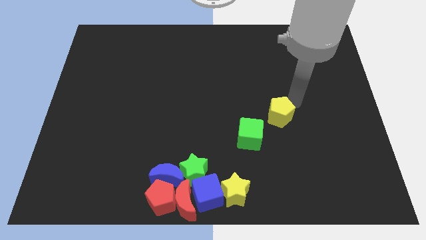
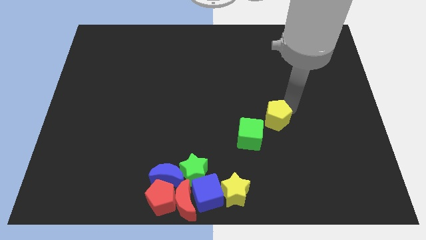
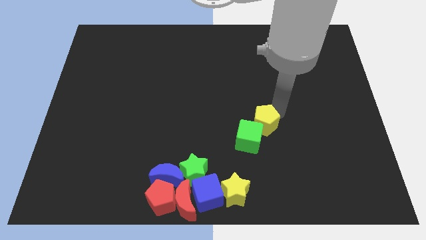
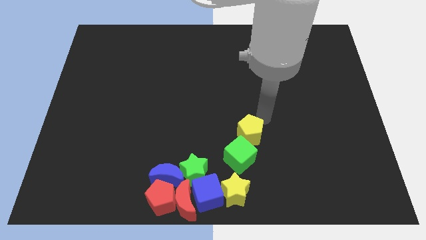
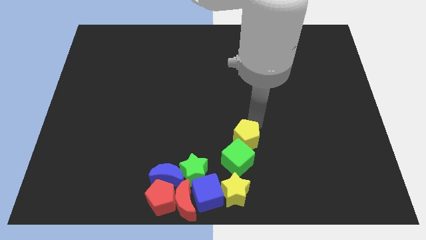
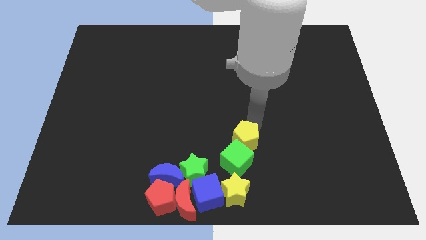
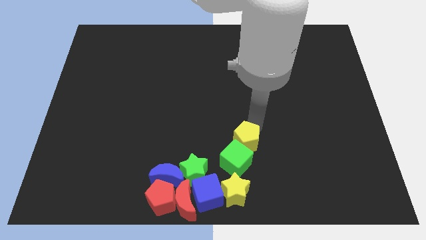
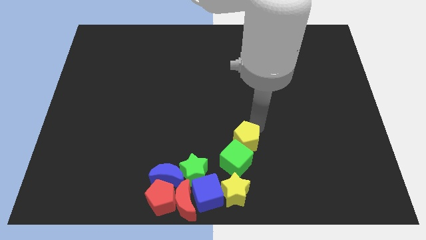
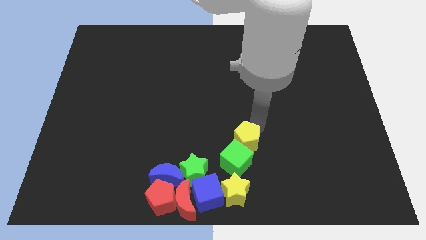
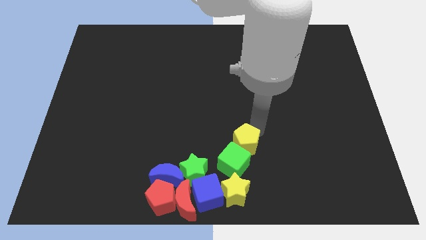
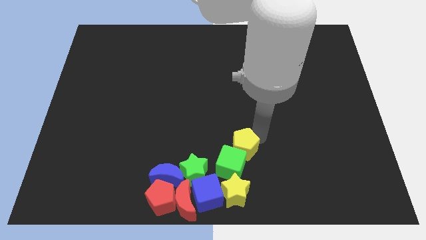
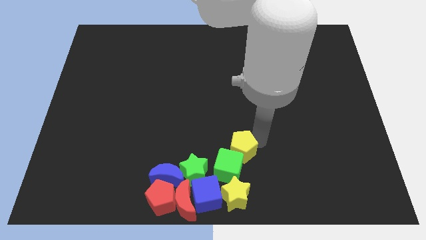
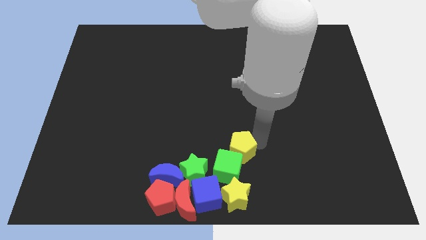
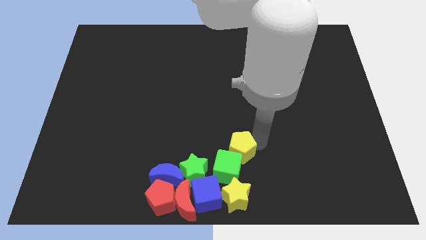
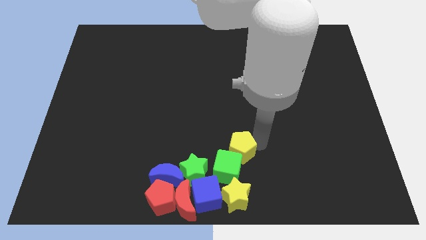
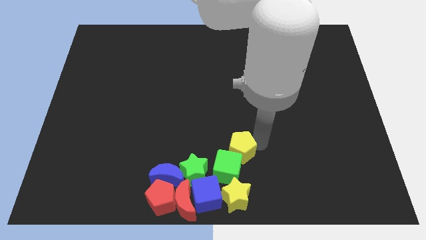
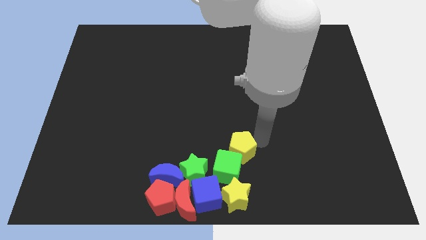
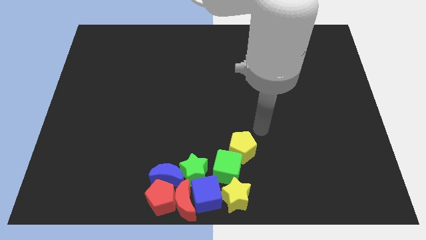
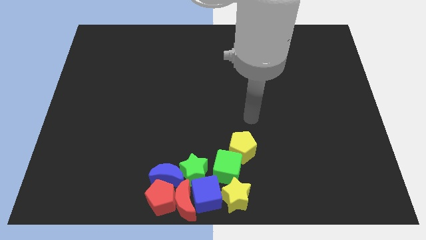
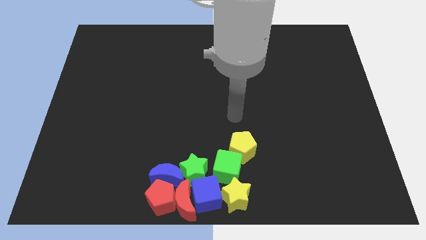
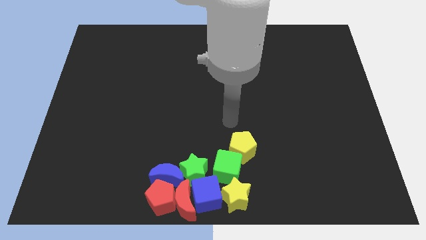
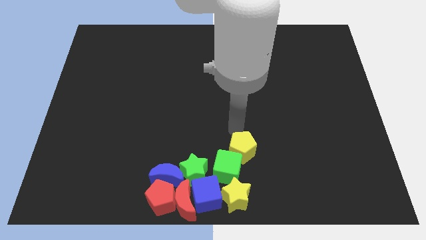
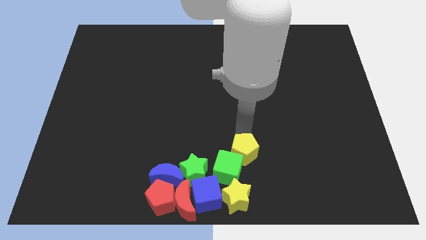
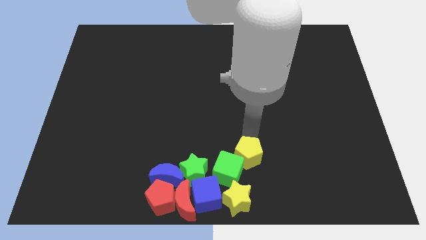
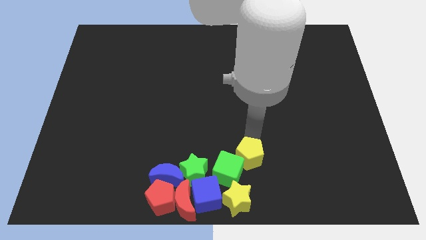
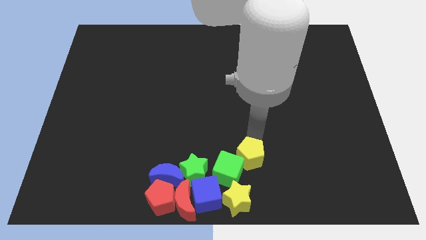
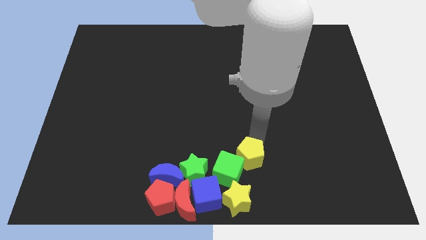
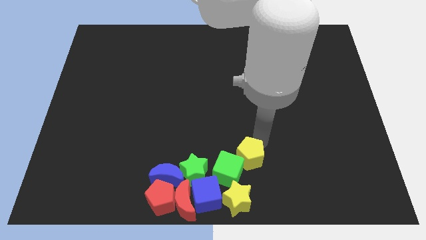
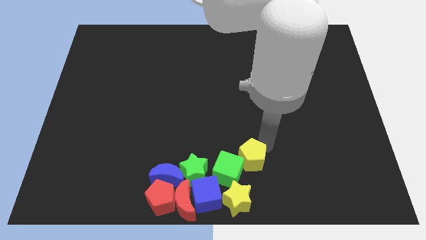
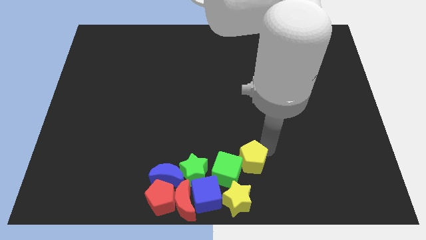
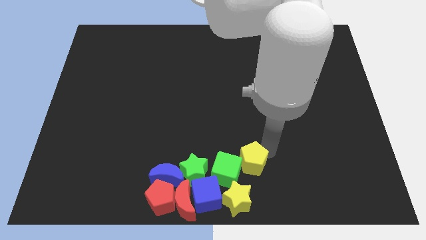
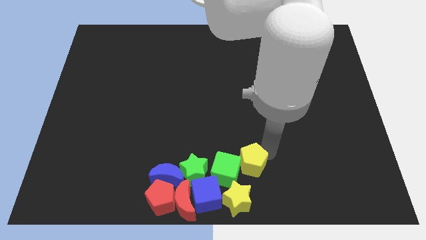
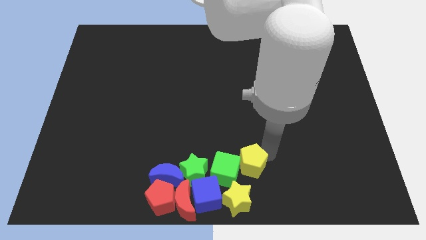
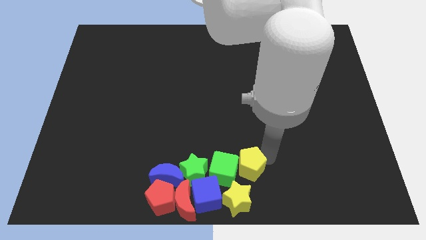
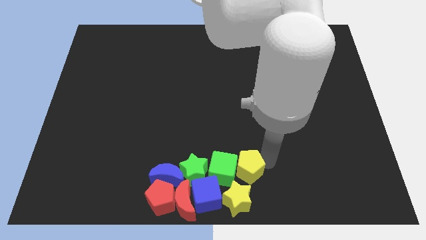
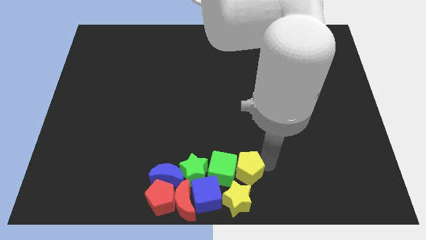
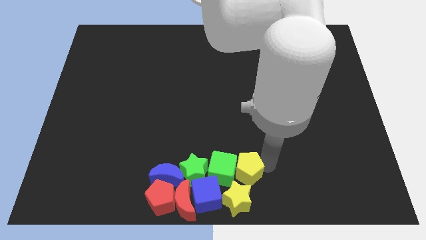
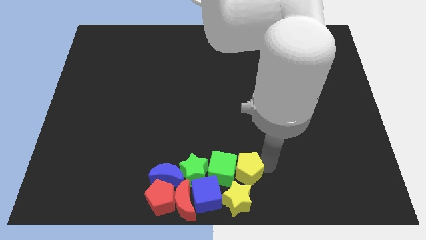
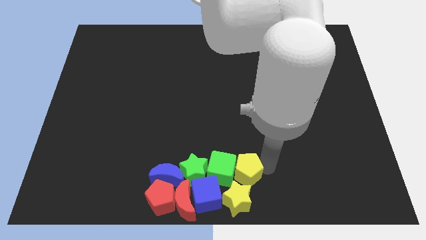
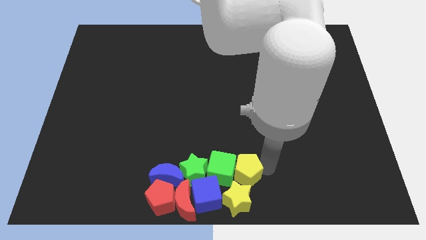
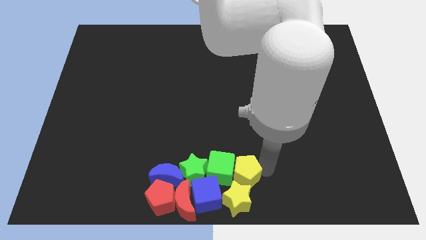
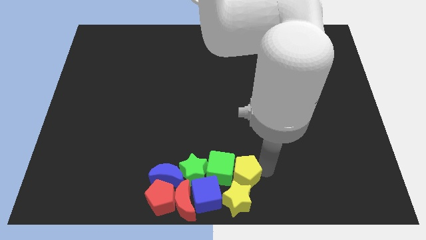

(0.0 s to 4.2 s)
place the green cube and the yellow pentagon at the bottom center

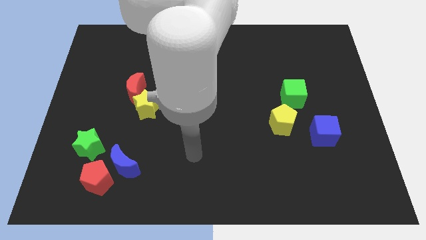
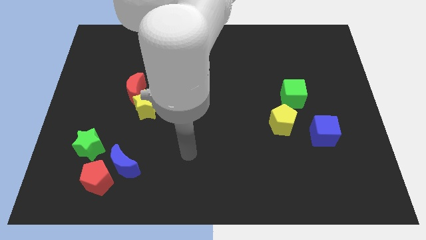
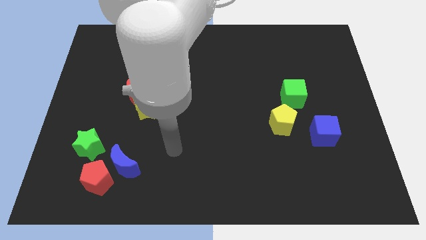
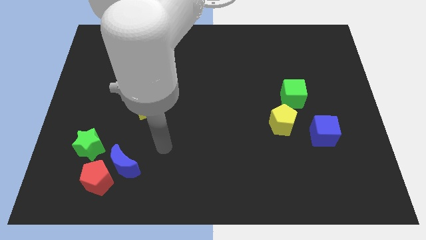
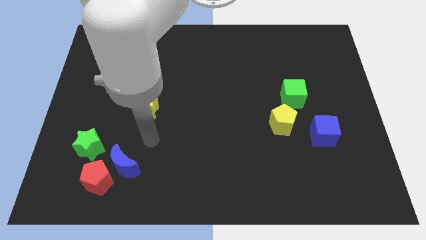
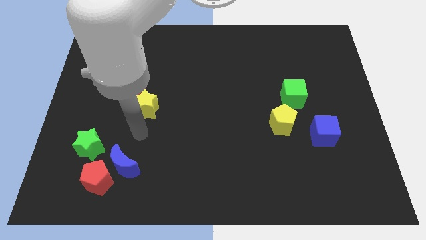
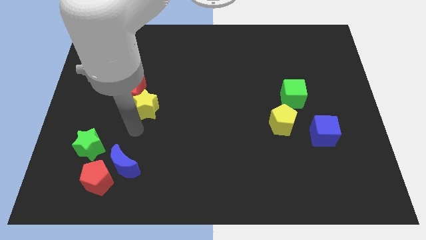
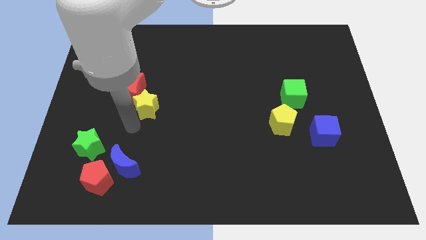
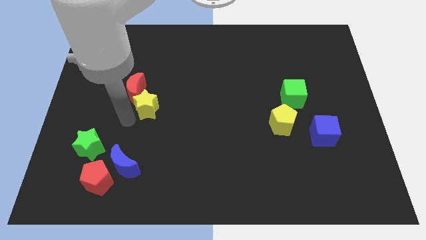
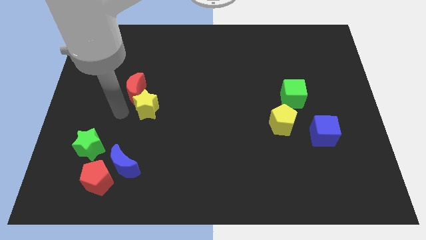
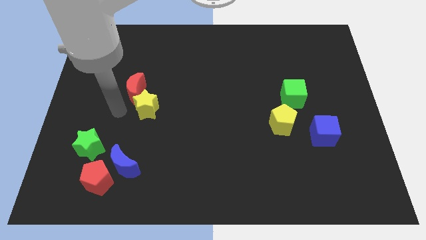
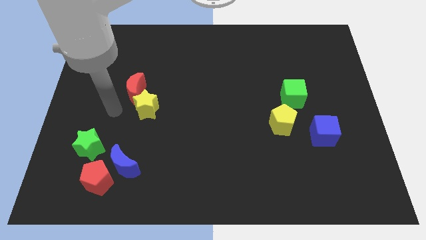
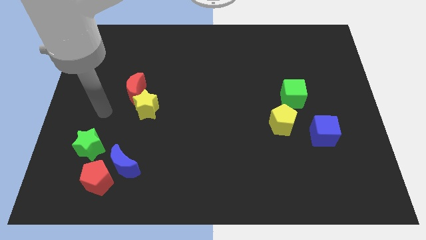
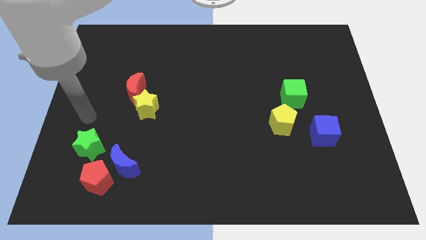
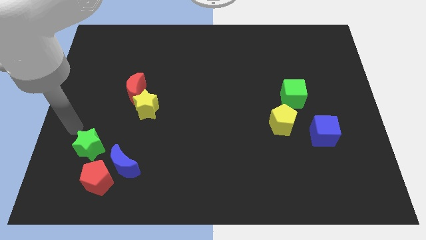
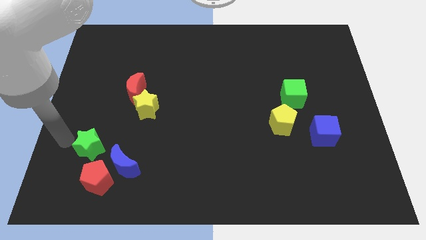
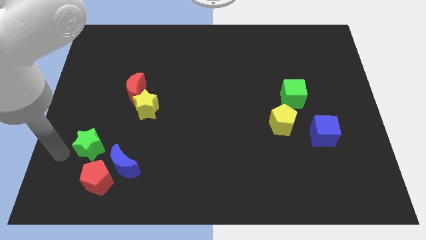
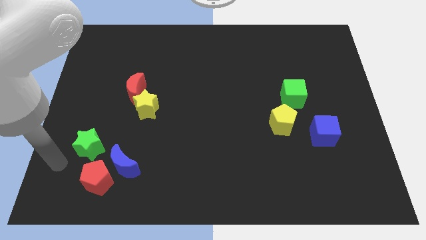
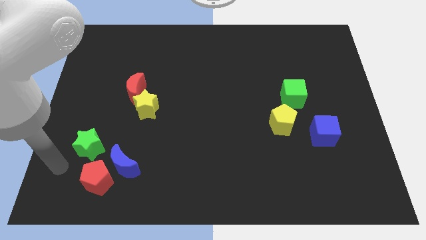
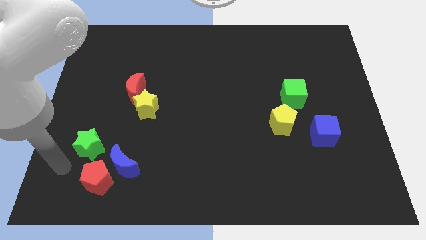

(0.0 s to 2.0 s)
move the arm around the green star blue moon red pentagon

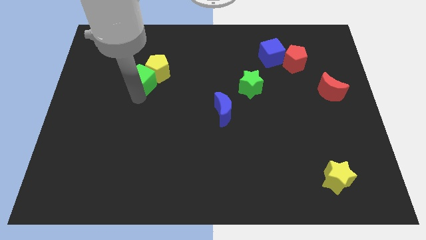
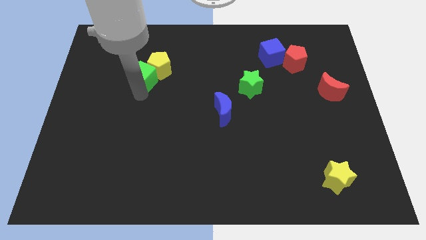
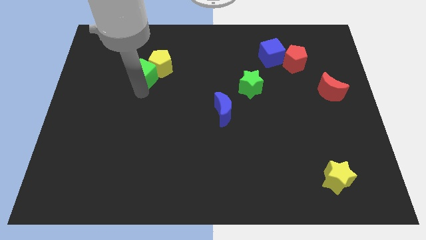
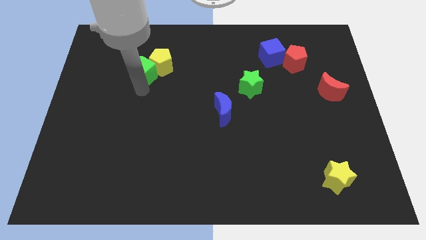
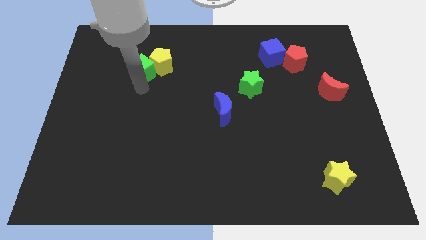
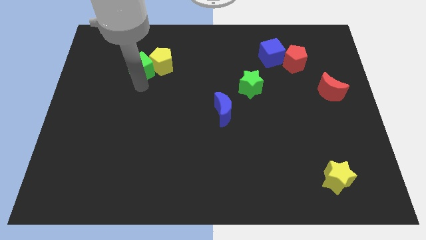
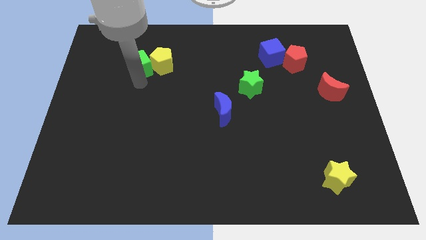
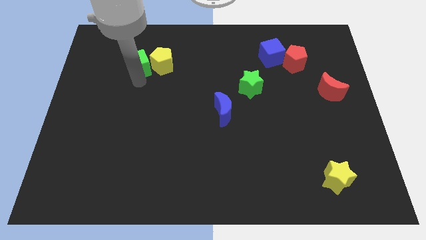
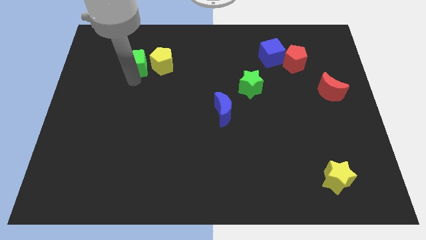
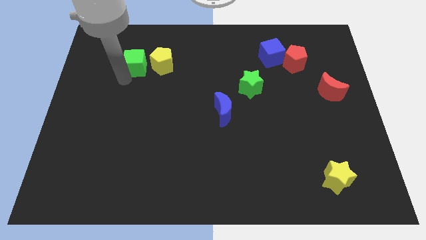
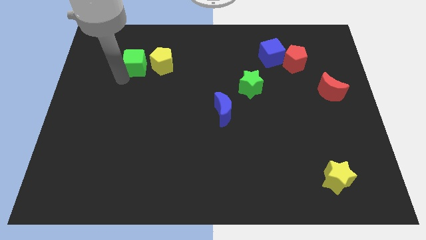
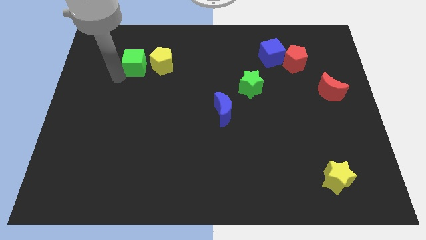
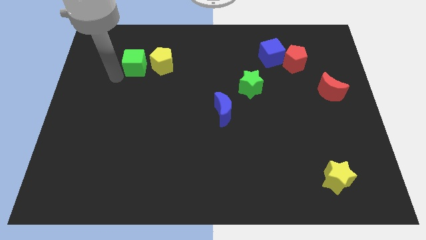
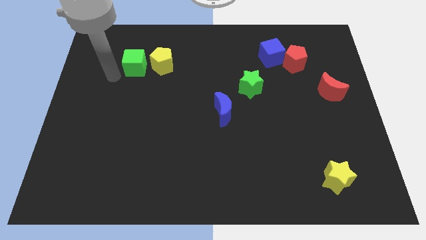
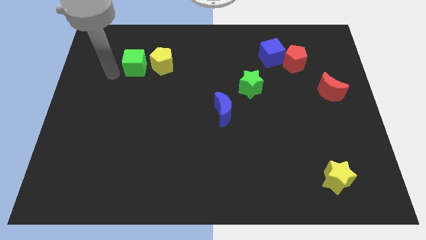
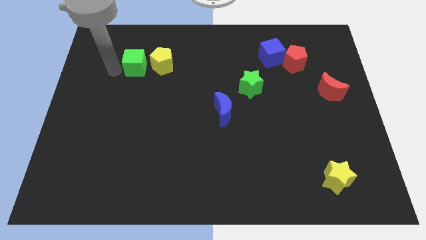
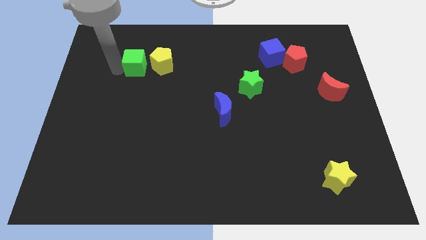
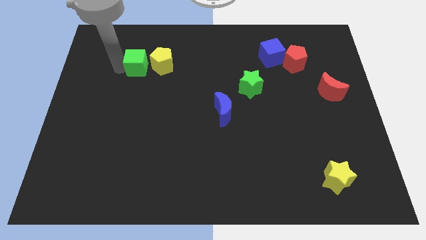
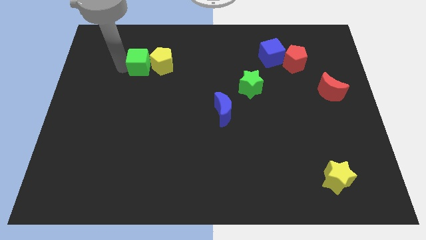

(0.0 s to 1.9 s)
move the green cube to the left of the yellow pentagon

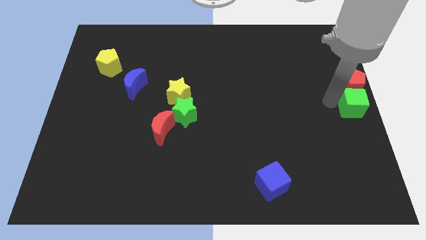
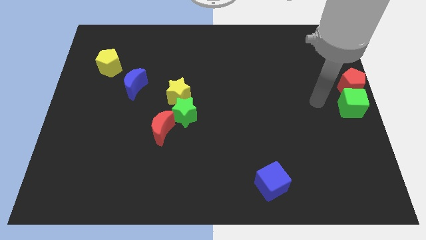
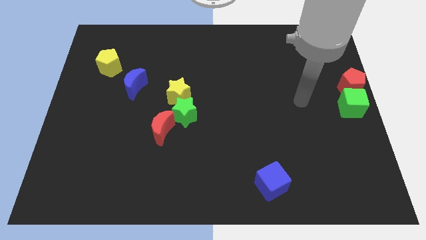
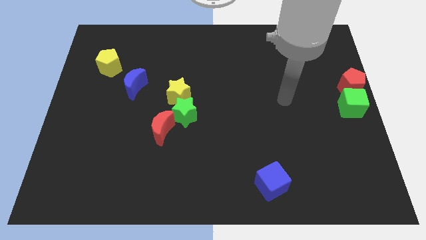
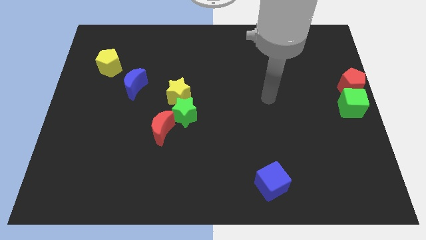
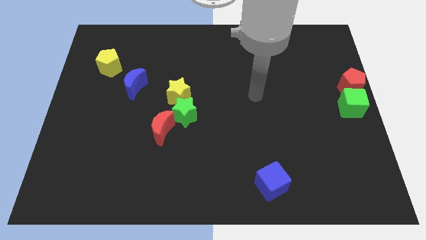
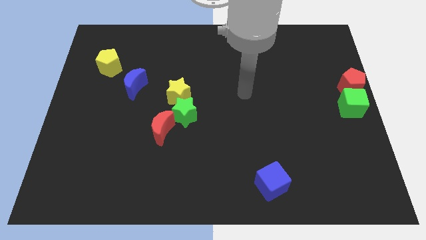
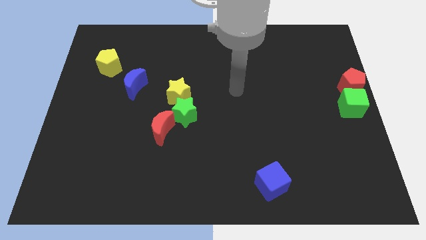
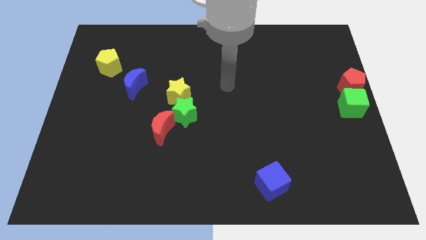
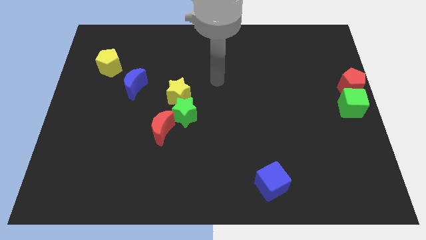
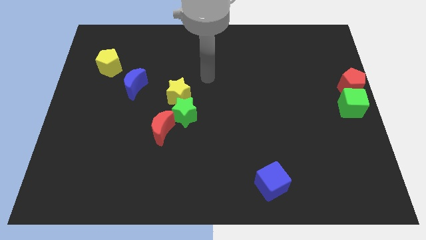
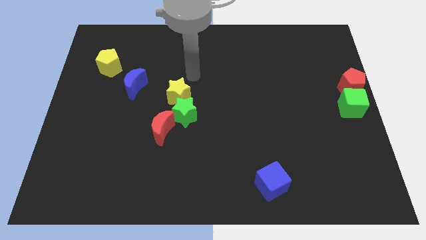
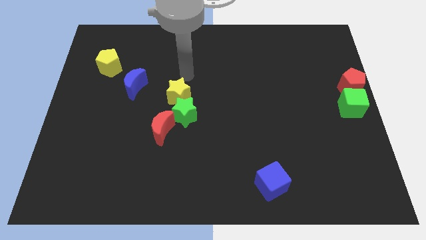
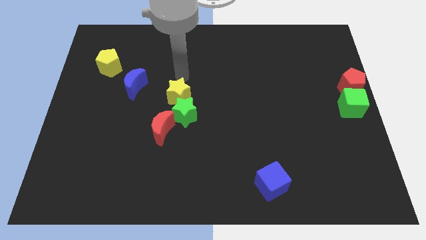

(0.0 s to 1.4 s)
move the pointer away from the green cube
